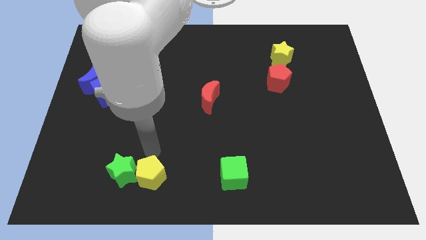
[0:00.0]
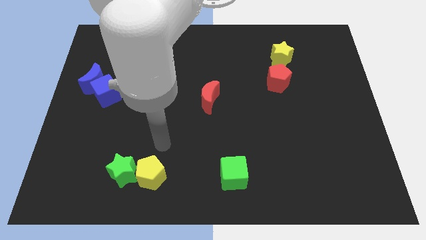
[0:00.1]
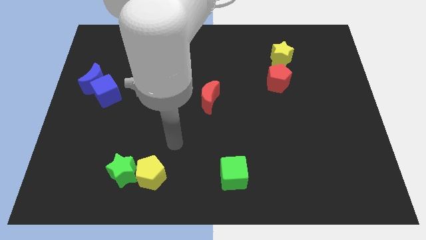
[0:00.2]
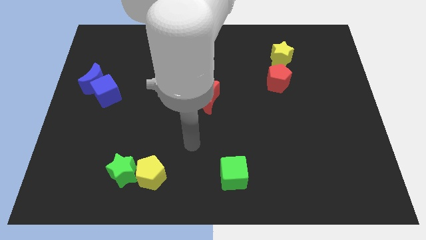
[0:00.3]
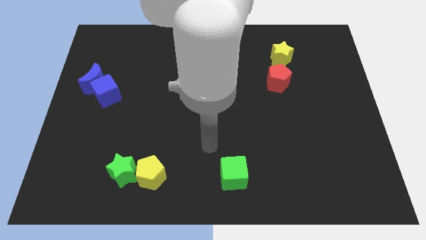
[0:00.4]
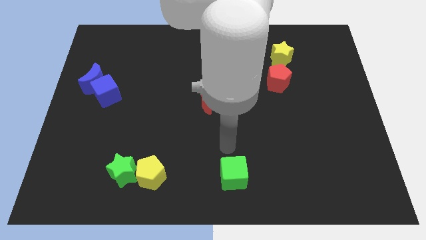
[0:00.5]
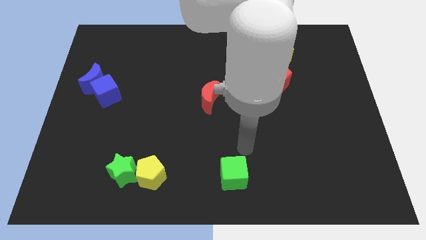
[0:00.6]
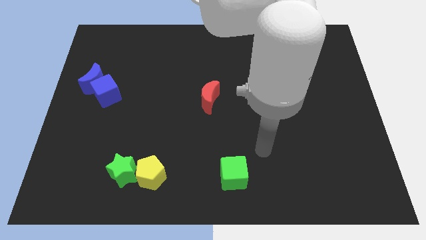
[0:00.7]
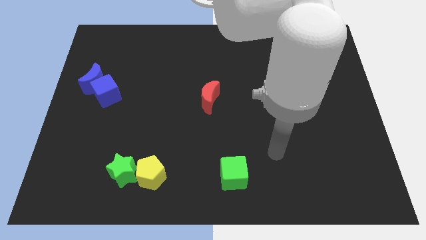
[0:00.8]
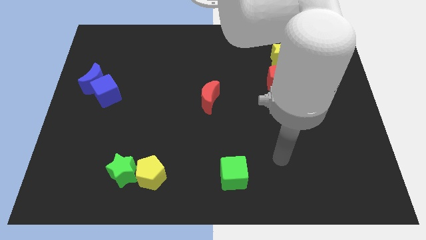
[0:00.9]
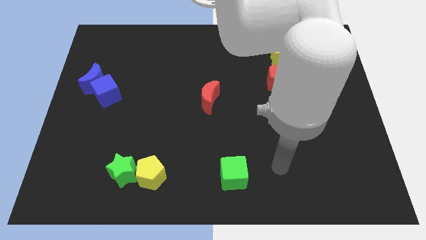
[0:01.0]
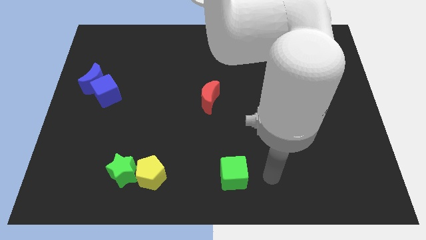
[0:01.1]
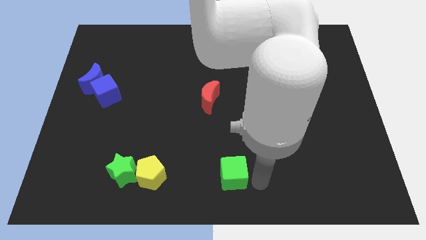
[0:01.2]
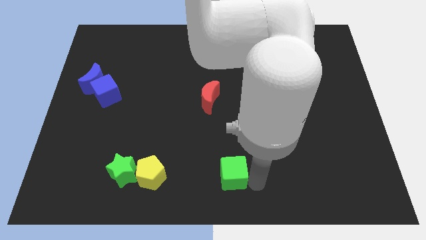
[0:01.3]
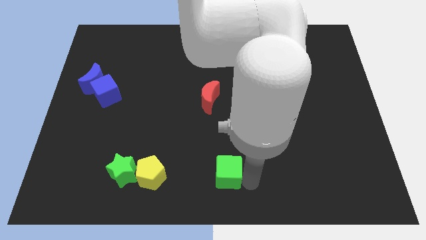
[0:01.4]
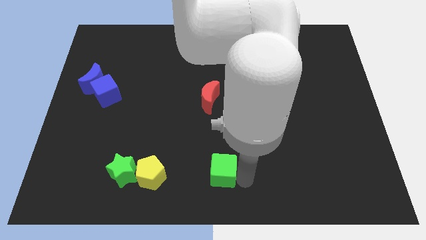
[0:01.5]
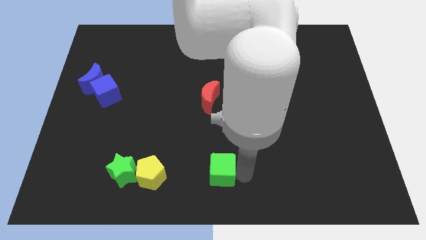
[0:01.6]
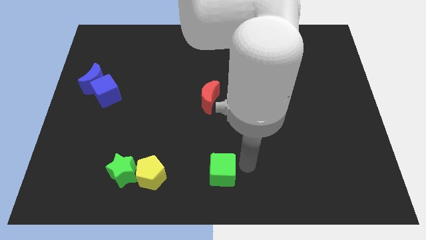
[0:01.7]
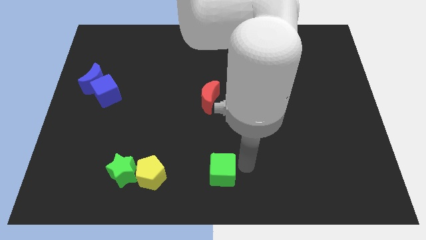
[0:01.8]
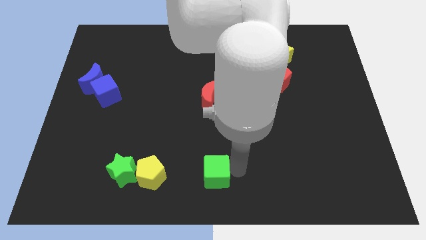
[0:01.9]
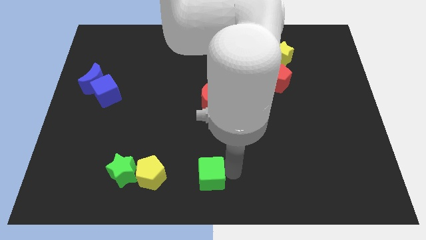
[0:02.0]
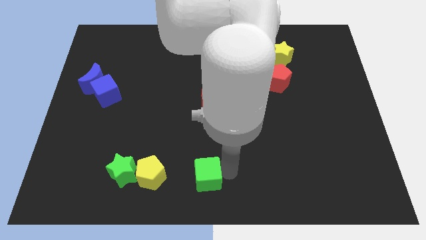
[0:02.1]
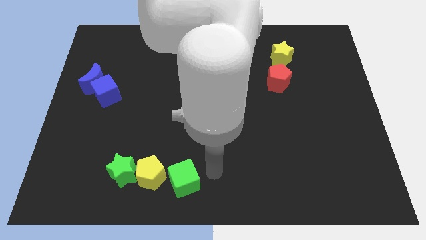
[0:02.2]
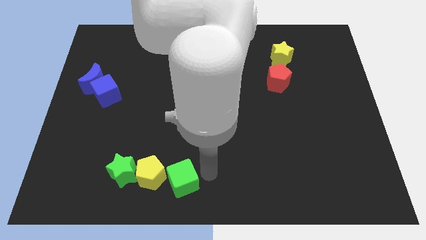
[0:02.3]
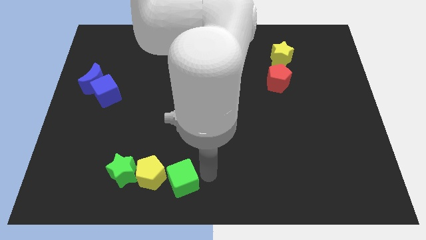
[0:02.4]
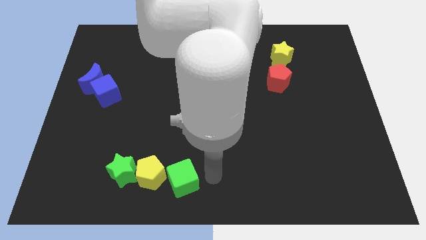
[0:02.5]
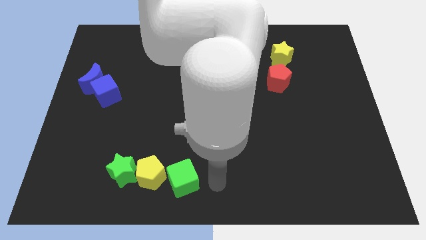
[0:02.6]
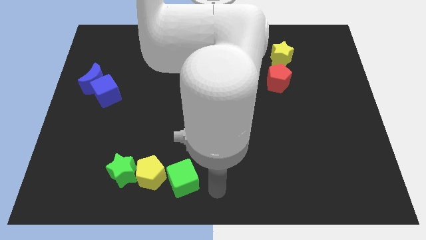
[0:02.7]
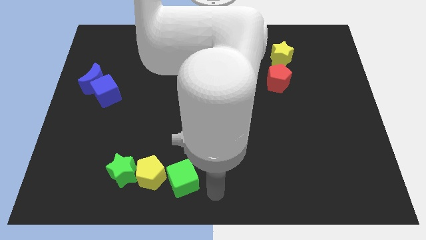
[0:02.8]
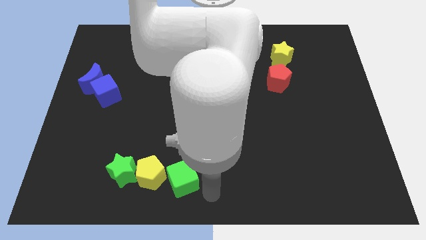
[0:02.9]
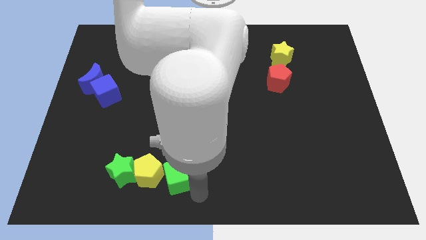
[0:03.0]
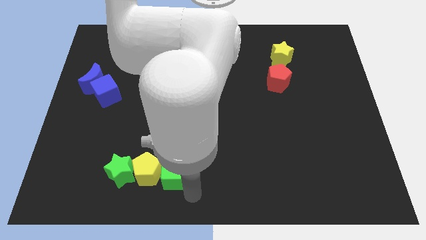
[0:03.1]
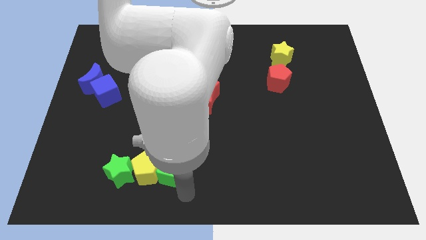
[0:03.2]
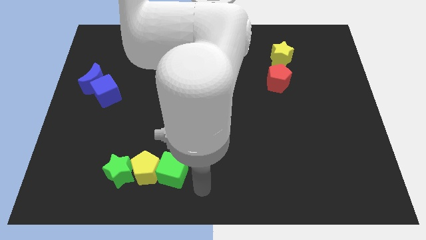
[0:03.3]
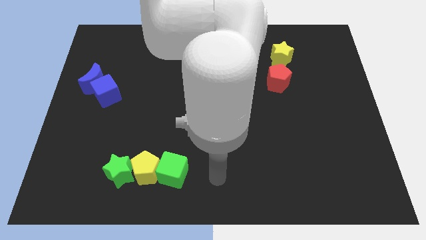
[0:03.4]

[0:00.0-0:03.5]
move the green cube into the right side of the yellow pentagon

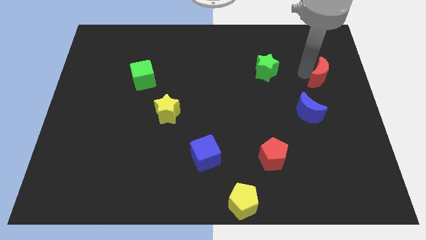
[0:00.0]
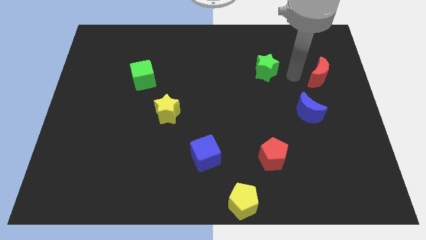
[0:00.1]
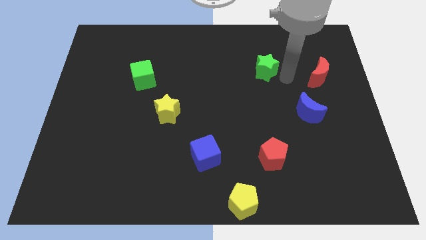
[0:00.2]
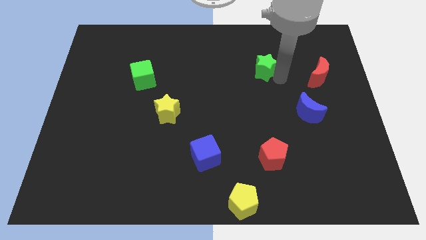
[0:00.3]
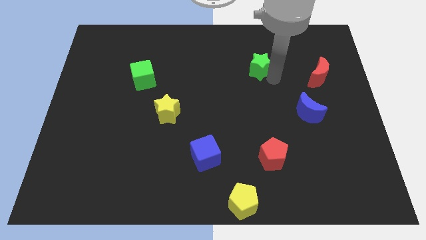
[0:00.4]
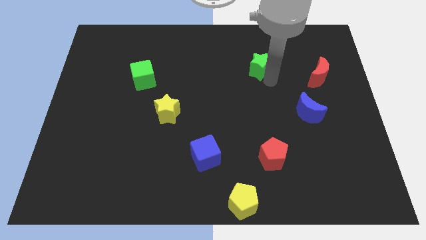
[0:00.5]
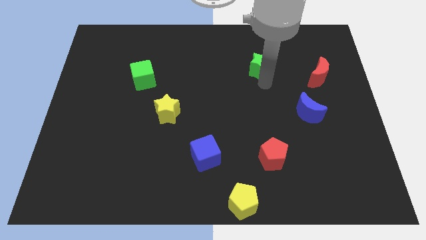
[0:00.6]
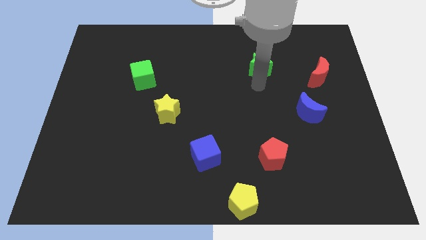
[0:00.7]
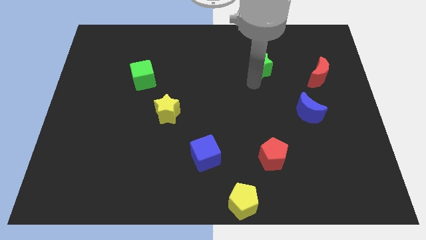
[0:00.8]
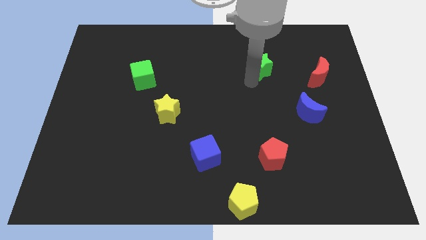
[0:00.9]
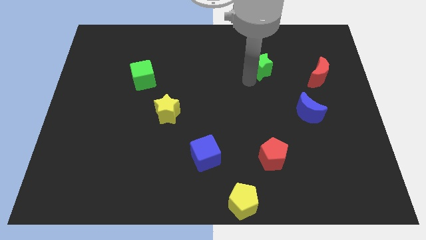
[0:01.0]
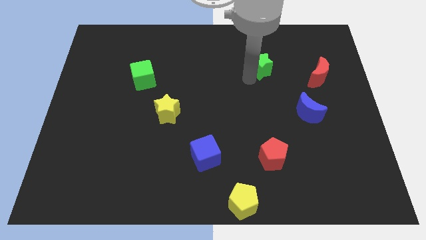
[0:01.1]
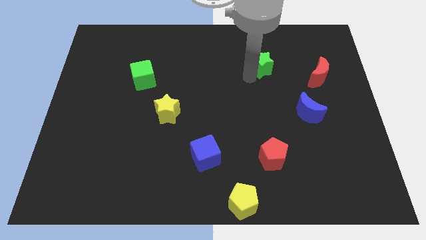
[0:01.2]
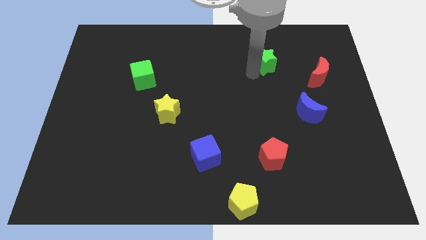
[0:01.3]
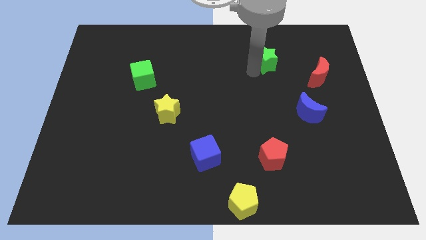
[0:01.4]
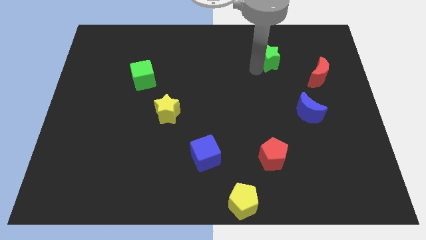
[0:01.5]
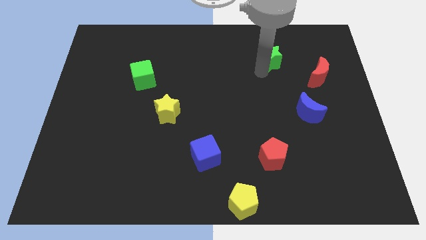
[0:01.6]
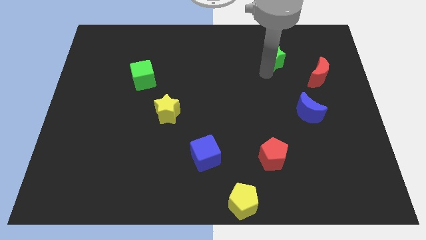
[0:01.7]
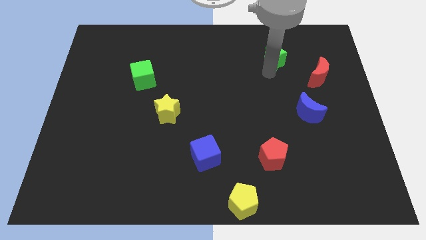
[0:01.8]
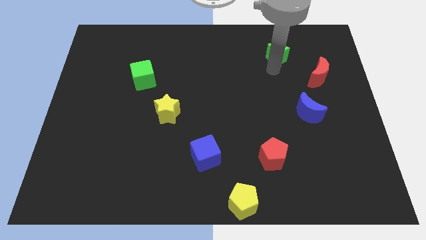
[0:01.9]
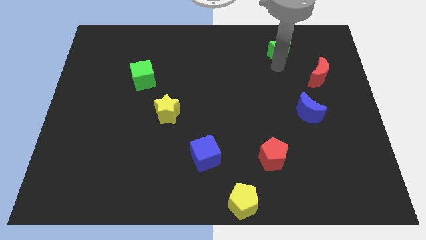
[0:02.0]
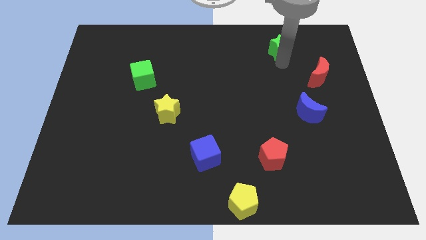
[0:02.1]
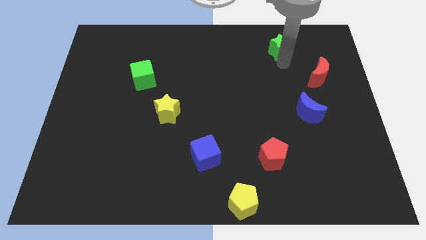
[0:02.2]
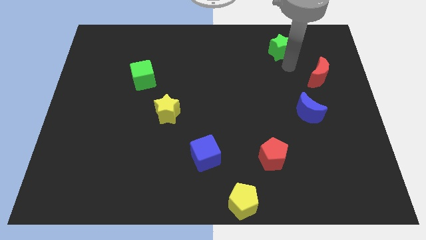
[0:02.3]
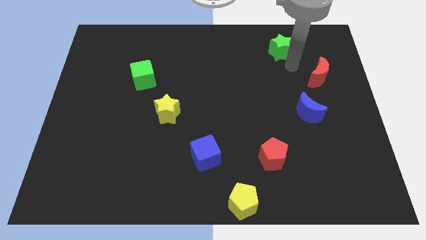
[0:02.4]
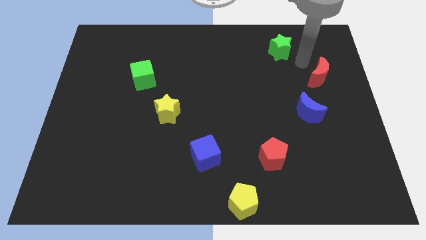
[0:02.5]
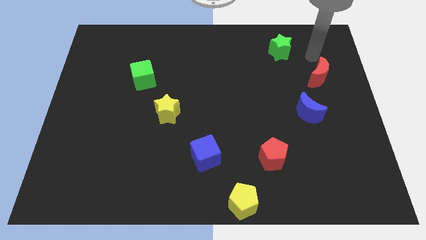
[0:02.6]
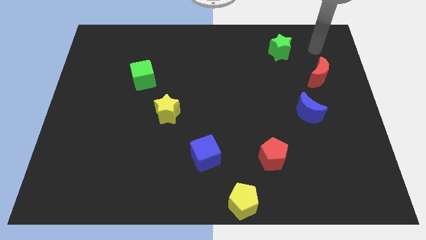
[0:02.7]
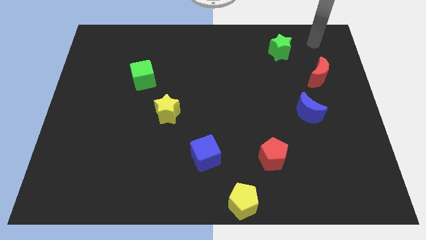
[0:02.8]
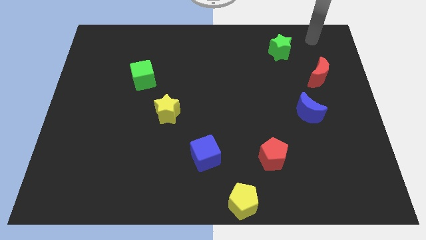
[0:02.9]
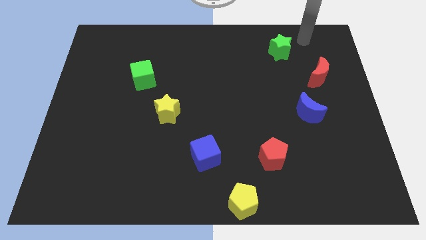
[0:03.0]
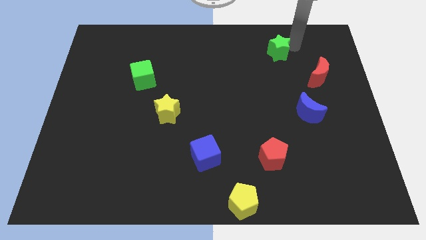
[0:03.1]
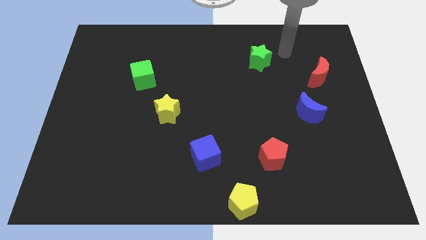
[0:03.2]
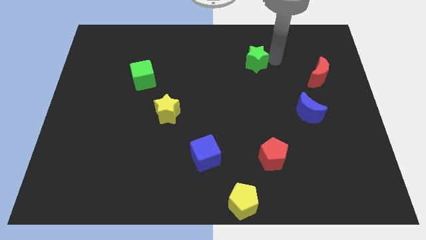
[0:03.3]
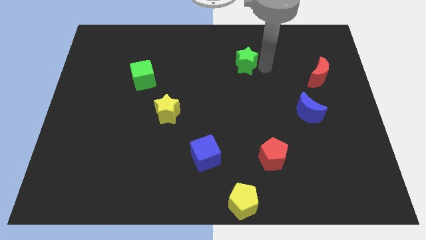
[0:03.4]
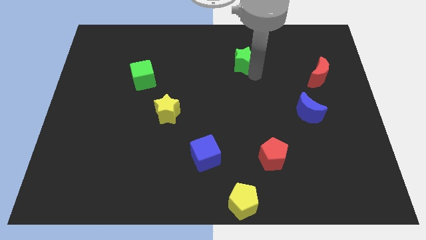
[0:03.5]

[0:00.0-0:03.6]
place the green star vertically above the yellow pentagon

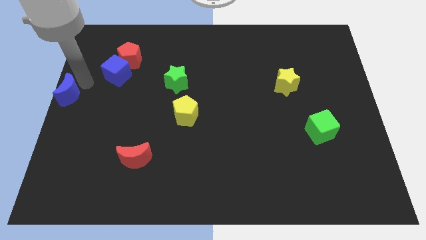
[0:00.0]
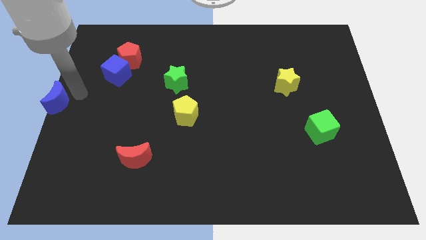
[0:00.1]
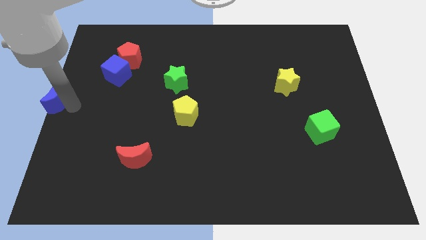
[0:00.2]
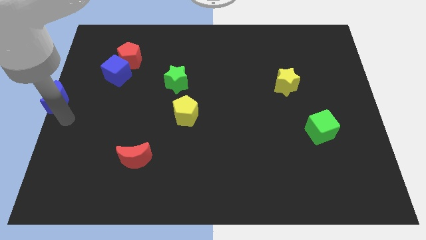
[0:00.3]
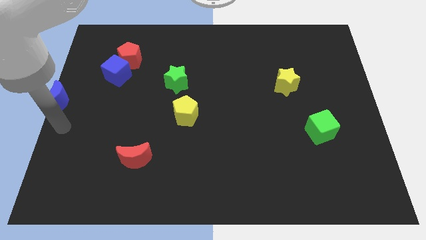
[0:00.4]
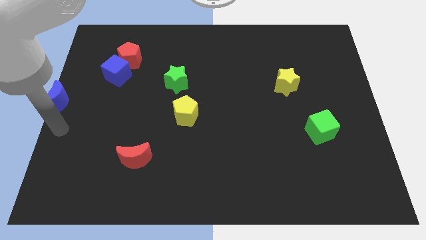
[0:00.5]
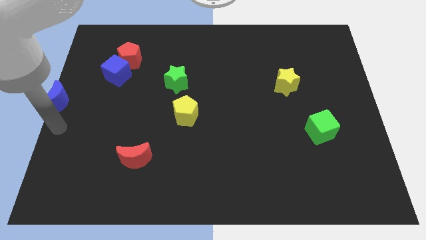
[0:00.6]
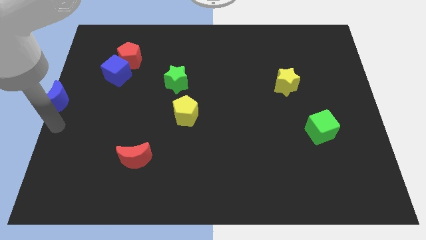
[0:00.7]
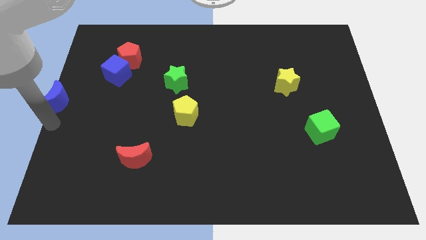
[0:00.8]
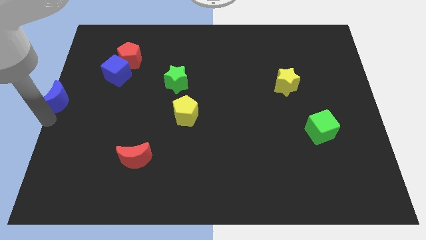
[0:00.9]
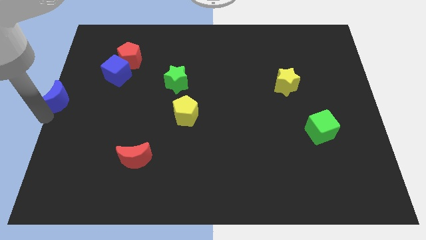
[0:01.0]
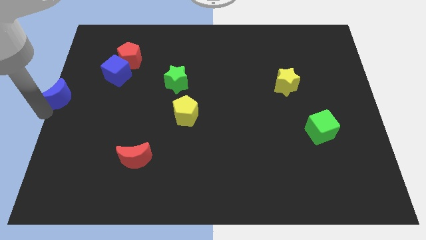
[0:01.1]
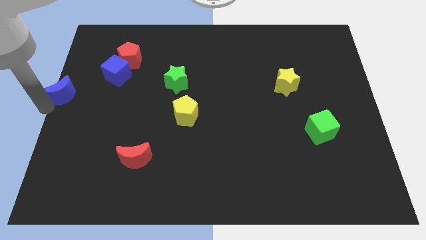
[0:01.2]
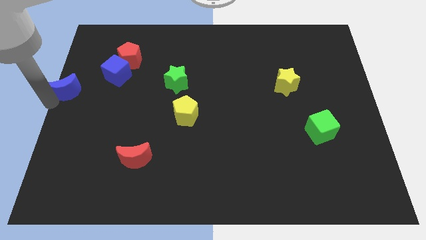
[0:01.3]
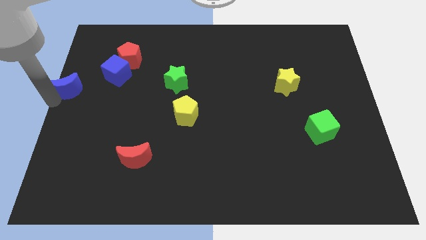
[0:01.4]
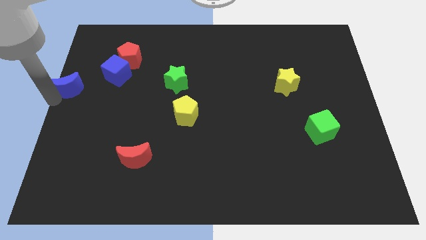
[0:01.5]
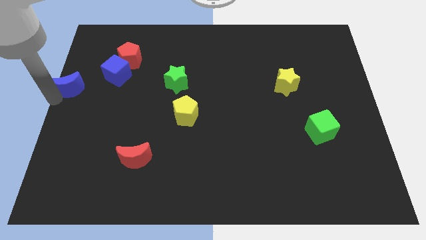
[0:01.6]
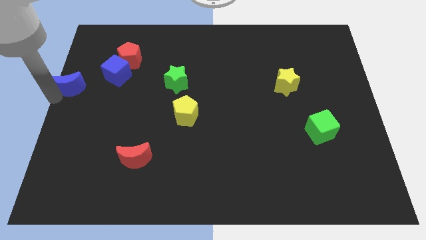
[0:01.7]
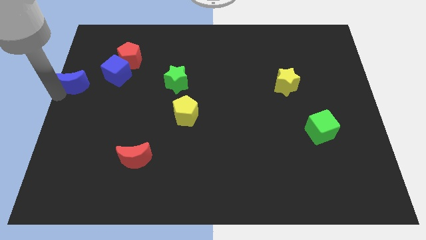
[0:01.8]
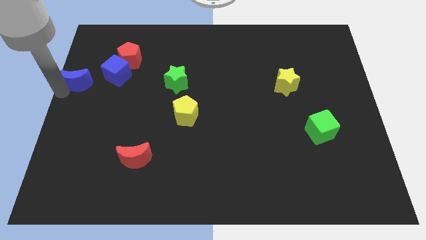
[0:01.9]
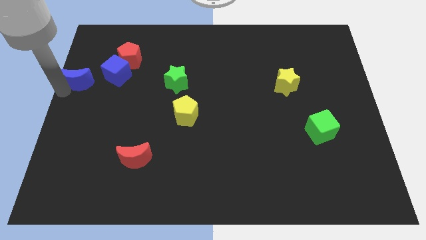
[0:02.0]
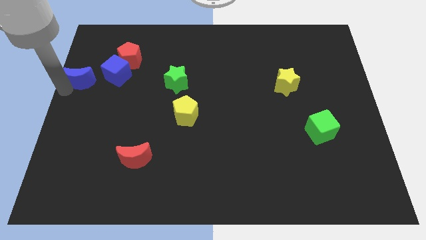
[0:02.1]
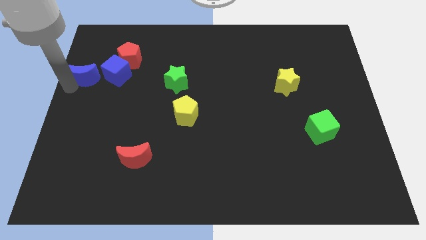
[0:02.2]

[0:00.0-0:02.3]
move the blue moon to the left of the blue cube
